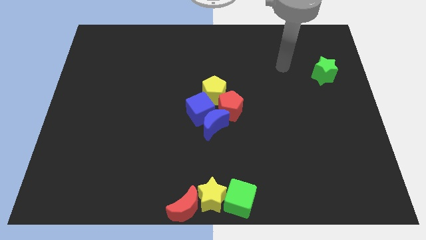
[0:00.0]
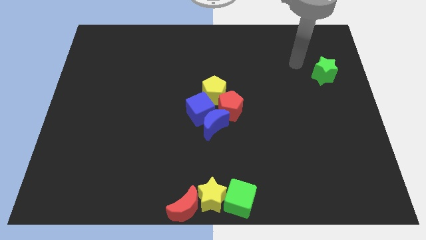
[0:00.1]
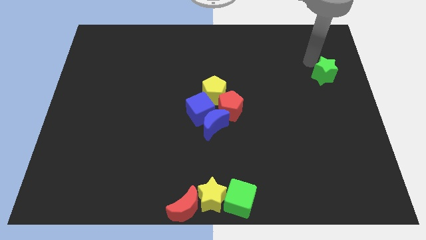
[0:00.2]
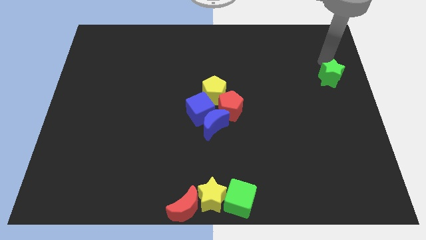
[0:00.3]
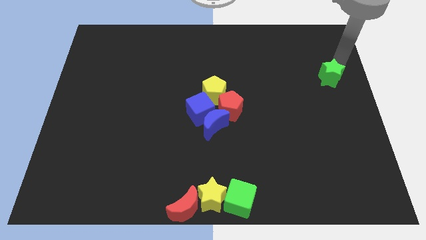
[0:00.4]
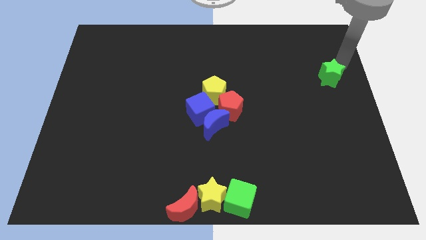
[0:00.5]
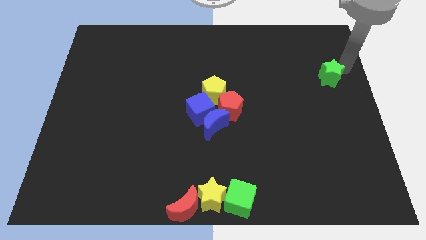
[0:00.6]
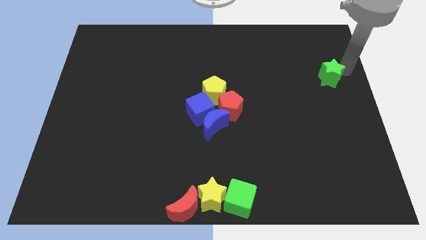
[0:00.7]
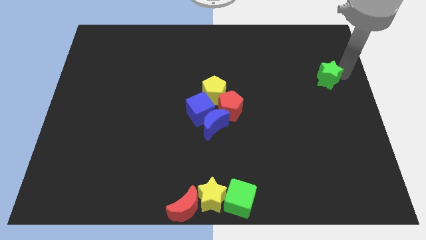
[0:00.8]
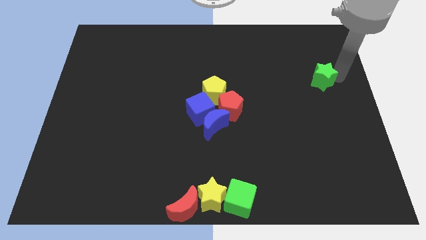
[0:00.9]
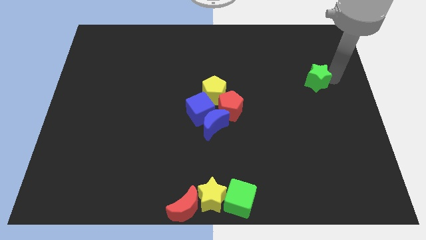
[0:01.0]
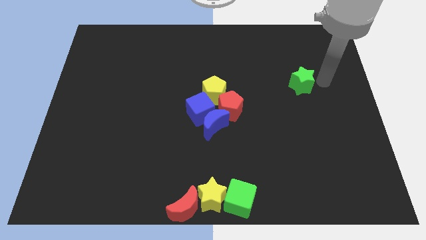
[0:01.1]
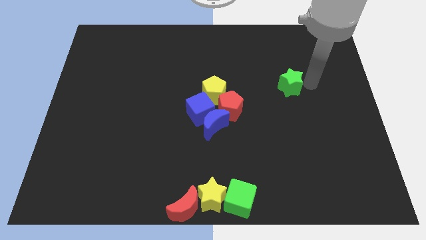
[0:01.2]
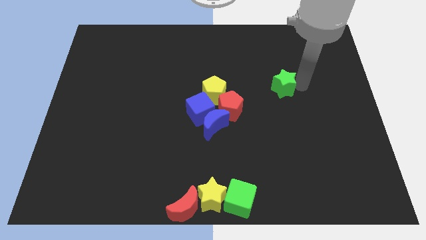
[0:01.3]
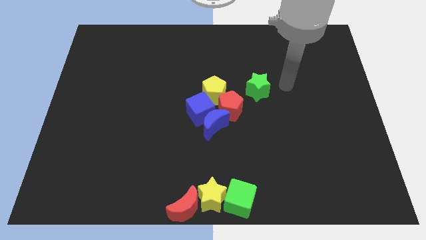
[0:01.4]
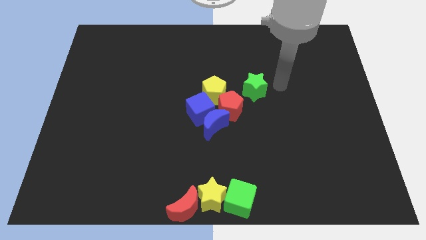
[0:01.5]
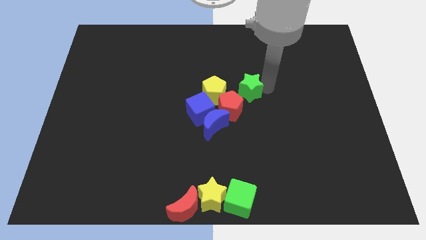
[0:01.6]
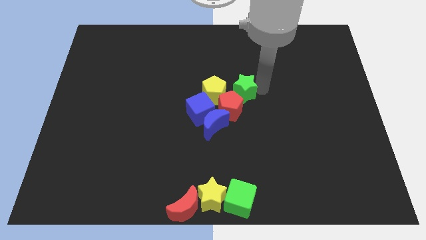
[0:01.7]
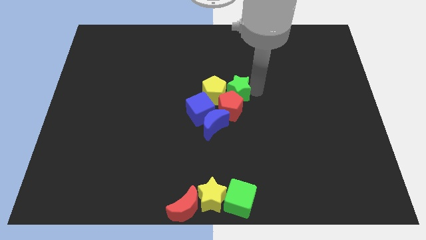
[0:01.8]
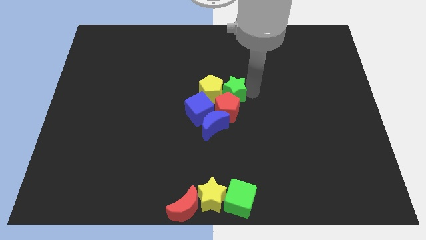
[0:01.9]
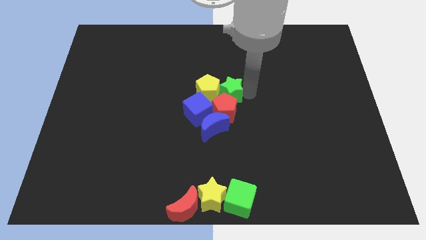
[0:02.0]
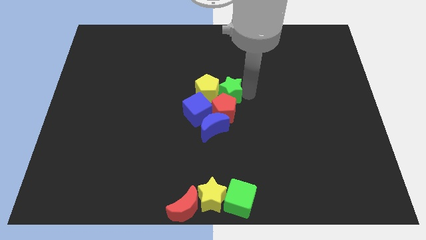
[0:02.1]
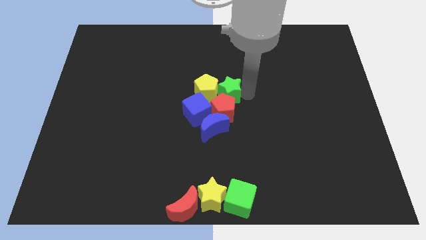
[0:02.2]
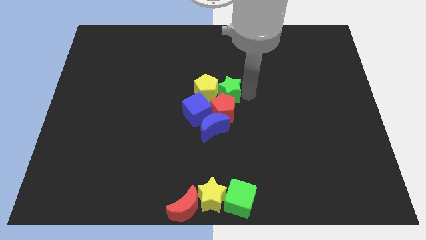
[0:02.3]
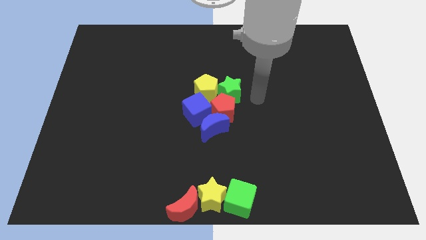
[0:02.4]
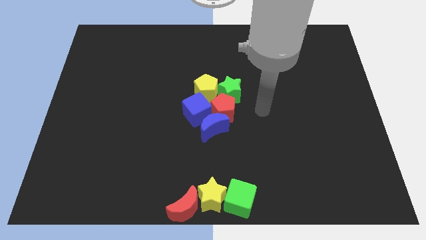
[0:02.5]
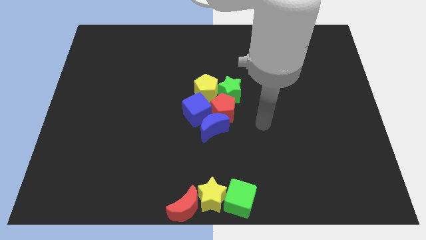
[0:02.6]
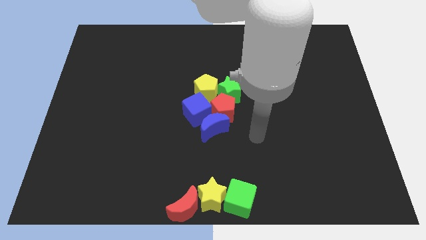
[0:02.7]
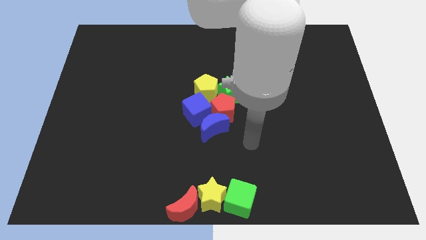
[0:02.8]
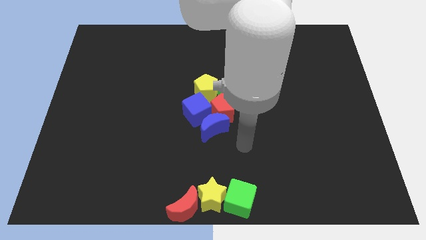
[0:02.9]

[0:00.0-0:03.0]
push the green star into the group of blocks

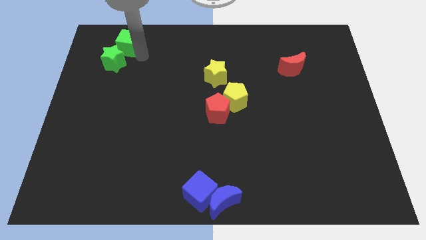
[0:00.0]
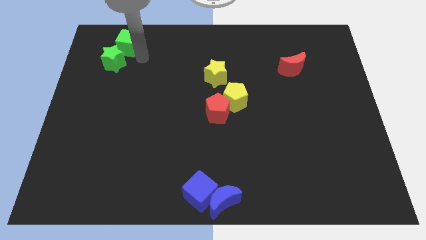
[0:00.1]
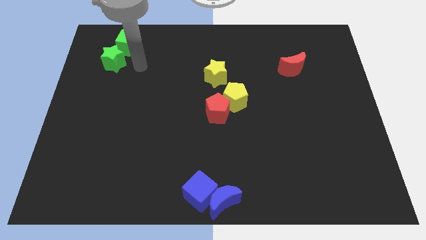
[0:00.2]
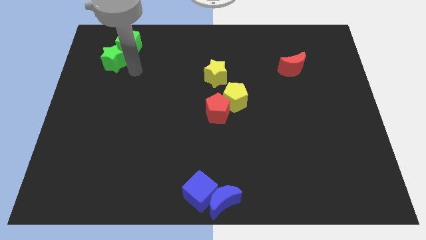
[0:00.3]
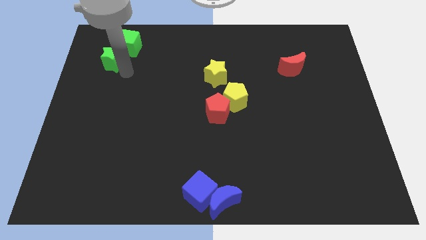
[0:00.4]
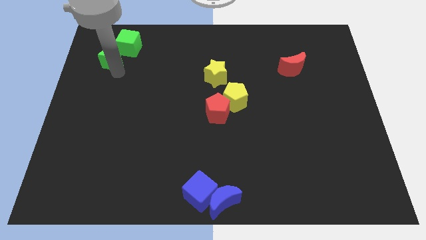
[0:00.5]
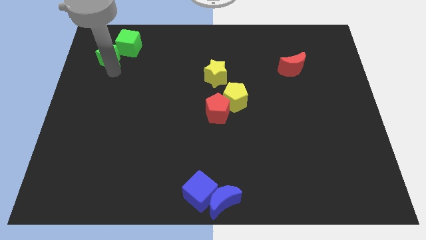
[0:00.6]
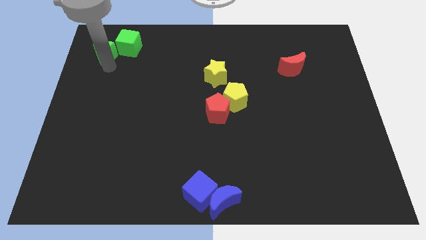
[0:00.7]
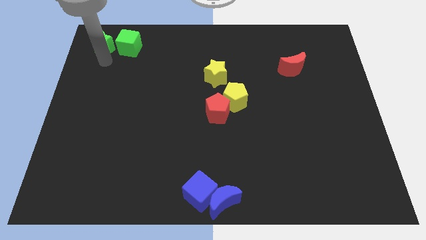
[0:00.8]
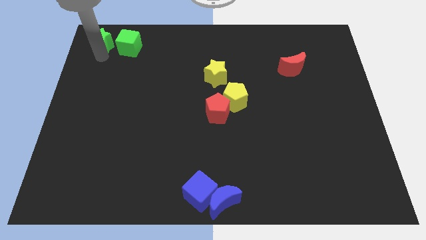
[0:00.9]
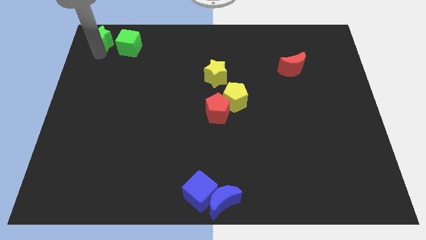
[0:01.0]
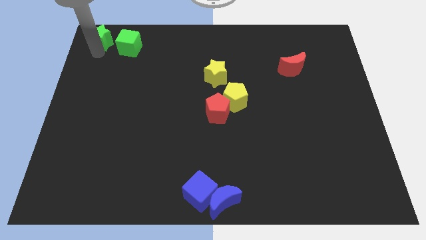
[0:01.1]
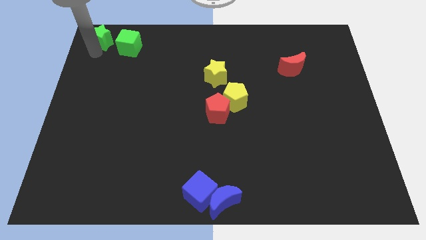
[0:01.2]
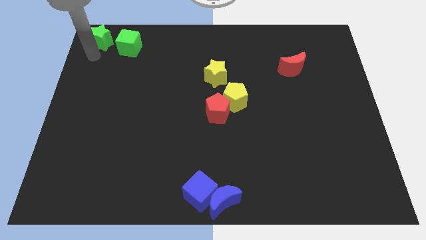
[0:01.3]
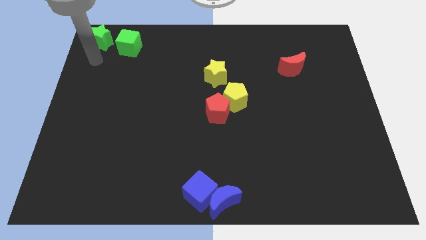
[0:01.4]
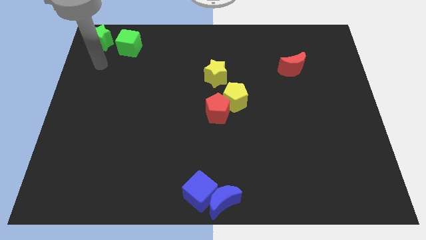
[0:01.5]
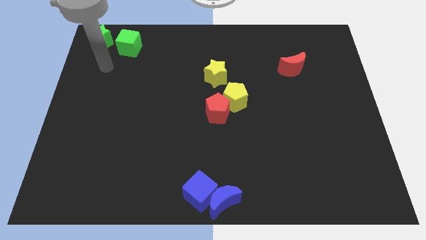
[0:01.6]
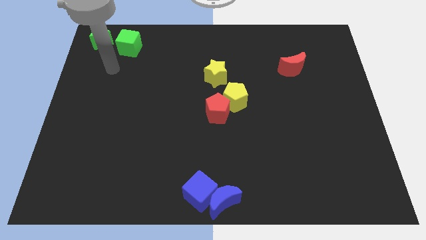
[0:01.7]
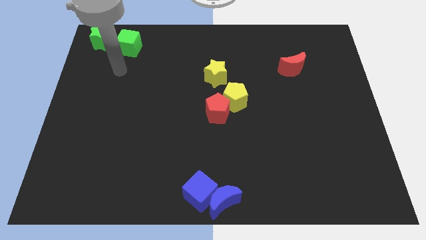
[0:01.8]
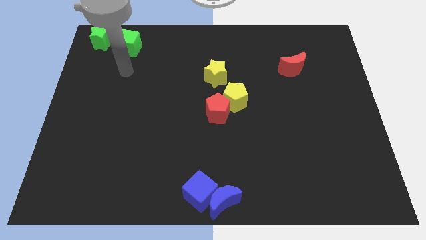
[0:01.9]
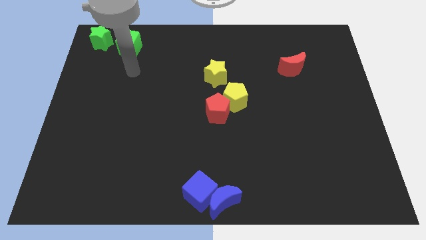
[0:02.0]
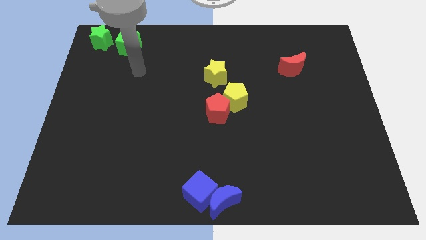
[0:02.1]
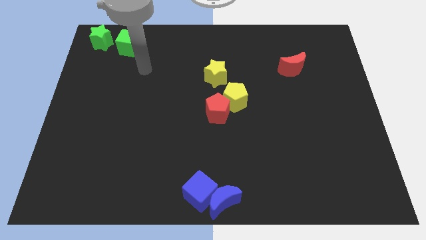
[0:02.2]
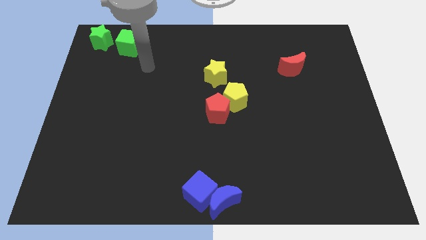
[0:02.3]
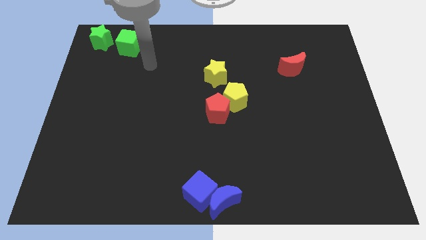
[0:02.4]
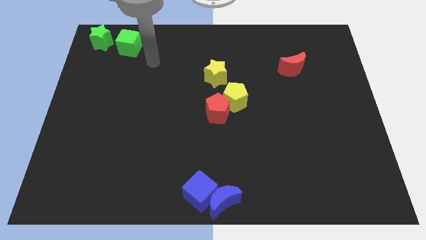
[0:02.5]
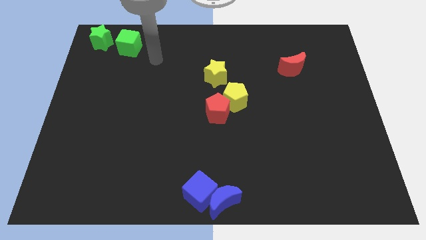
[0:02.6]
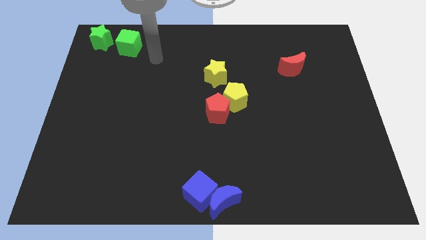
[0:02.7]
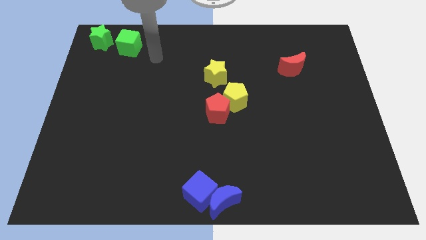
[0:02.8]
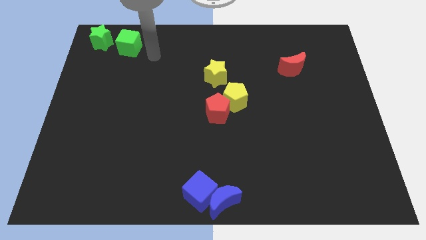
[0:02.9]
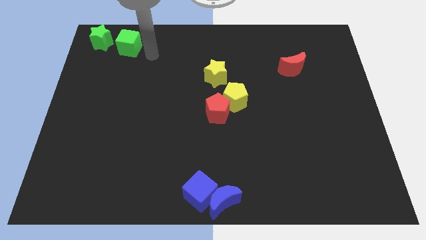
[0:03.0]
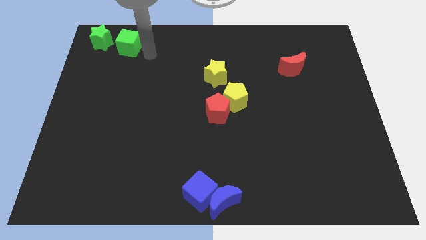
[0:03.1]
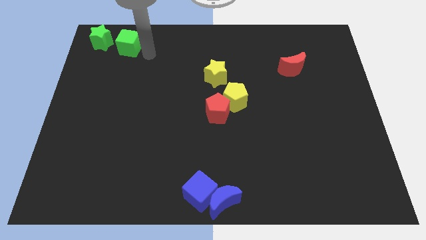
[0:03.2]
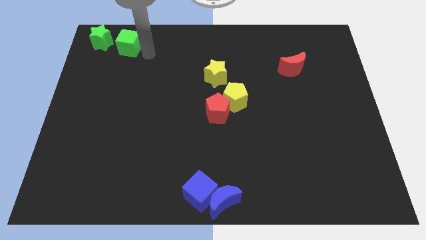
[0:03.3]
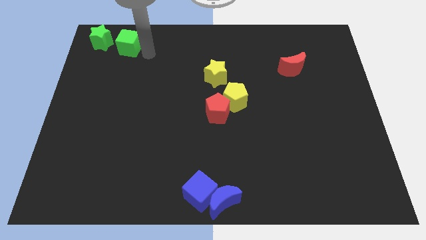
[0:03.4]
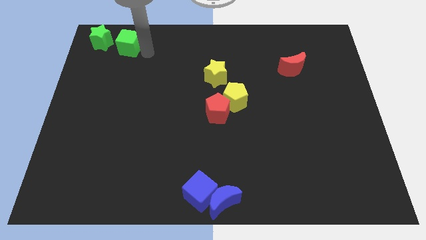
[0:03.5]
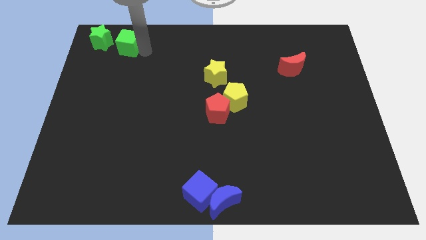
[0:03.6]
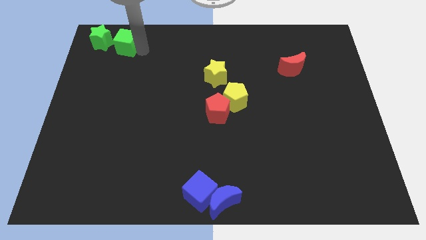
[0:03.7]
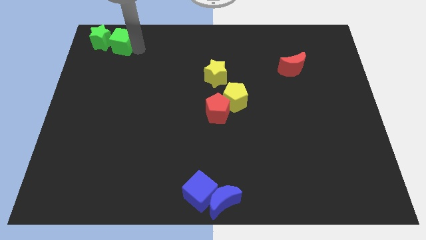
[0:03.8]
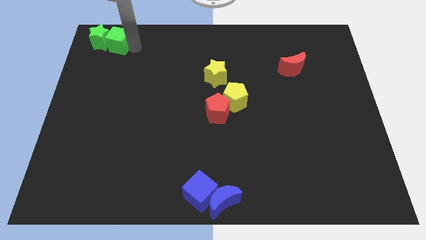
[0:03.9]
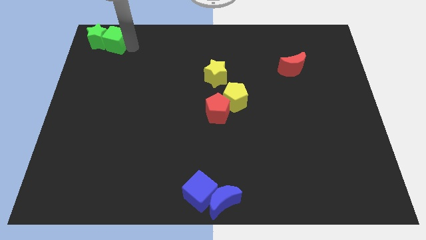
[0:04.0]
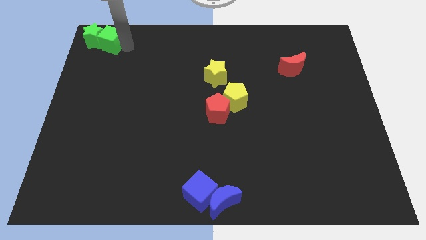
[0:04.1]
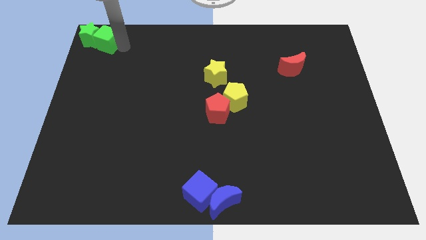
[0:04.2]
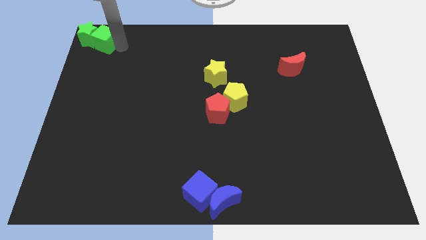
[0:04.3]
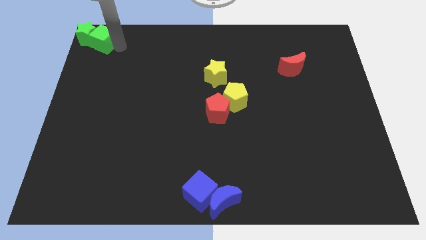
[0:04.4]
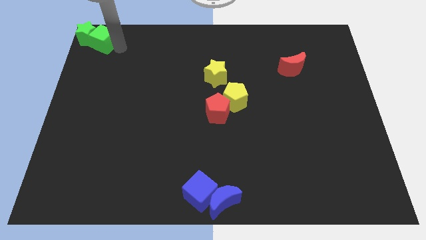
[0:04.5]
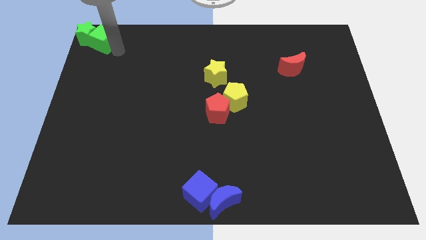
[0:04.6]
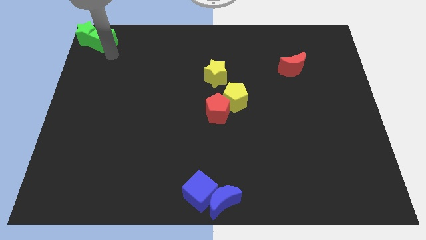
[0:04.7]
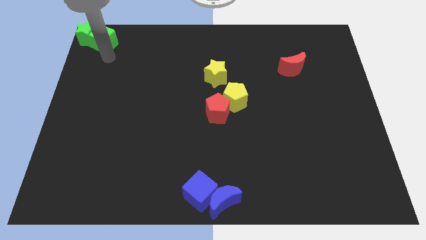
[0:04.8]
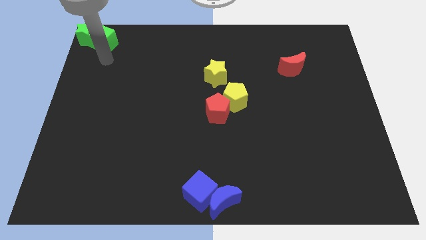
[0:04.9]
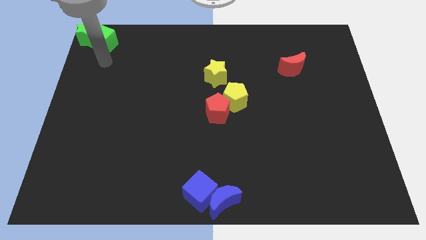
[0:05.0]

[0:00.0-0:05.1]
place the green star and green cube to the top left corner of the board

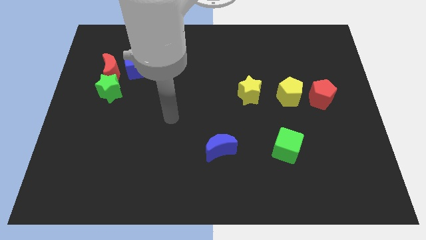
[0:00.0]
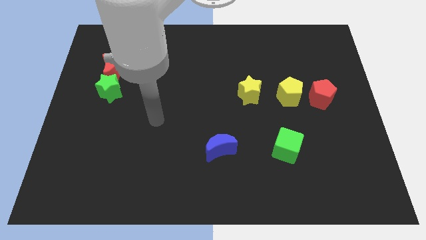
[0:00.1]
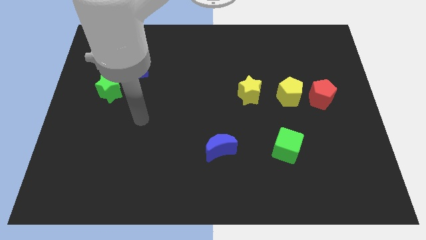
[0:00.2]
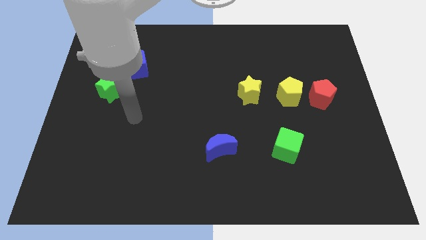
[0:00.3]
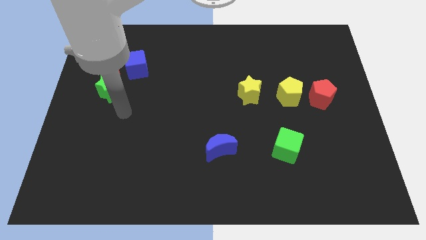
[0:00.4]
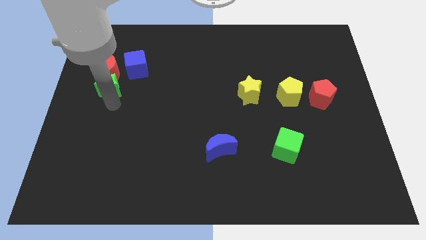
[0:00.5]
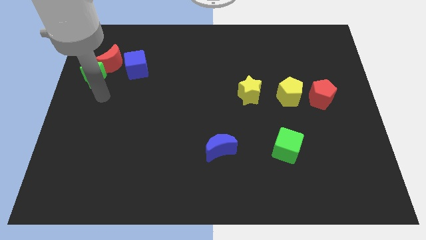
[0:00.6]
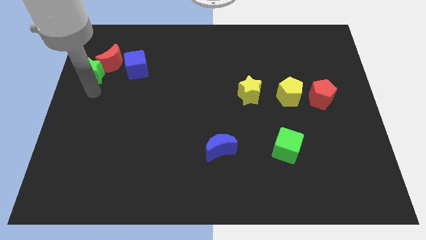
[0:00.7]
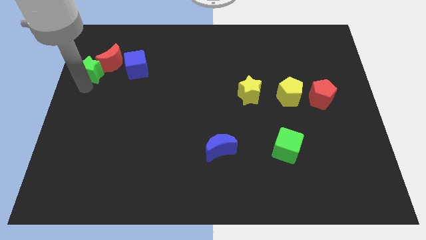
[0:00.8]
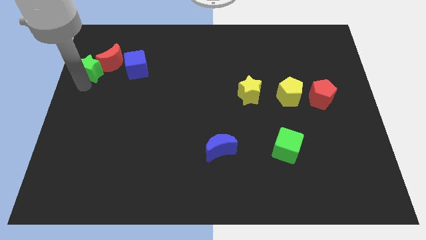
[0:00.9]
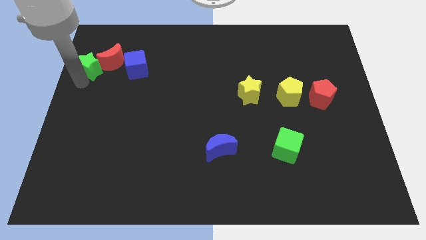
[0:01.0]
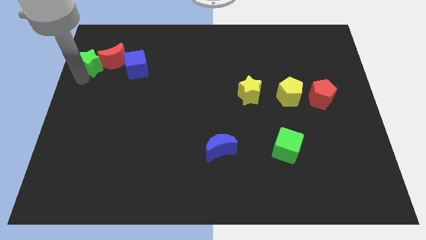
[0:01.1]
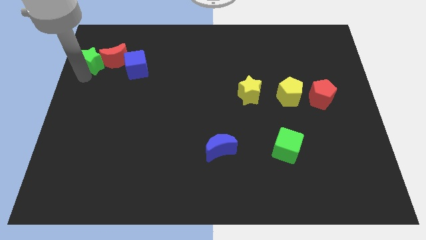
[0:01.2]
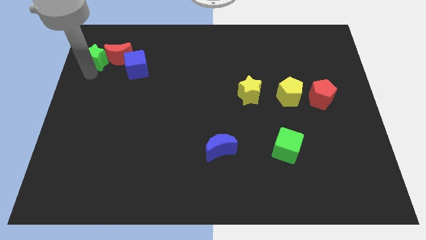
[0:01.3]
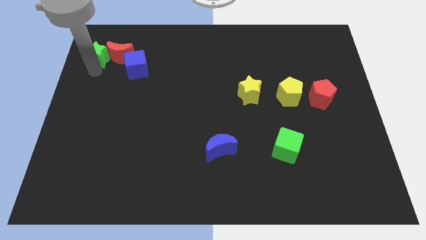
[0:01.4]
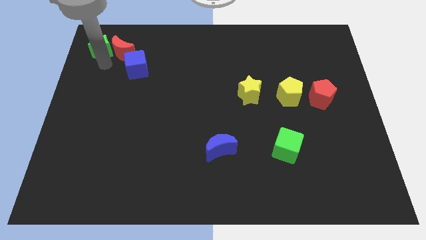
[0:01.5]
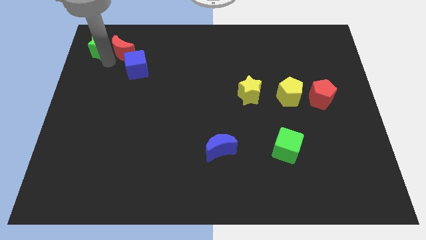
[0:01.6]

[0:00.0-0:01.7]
push the green star to the left of the red crescent
